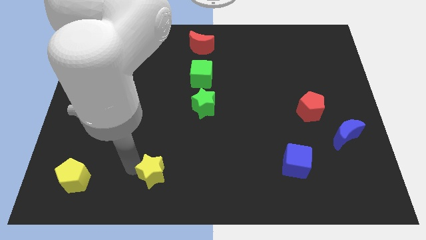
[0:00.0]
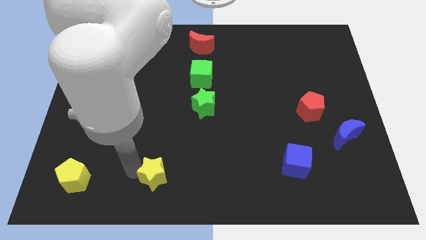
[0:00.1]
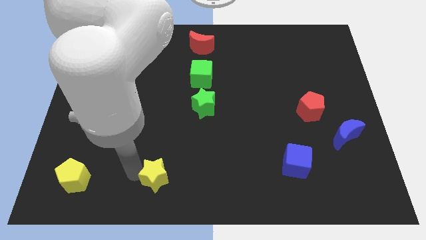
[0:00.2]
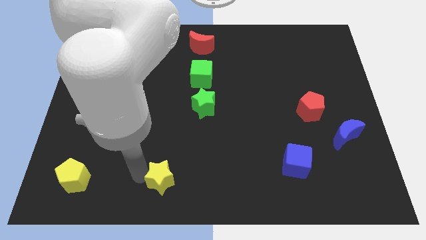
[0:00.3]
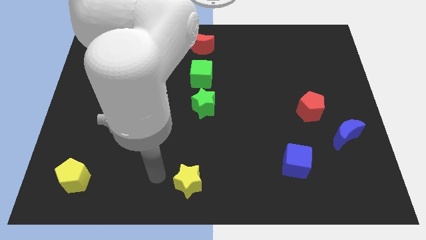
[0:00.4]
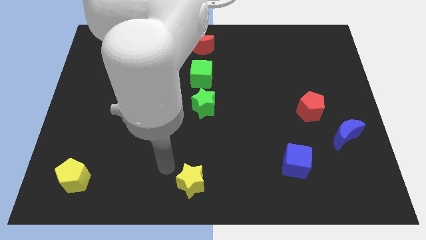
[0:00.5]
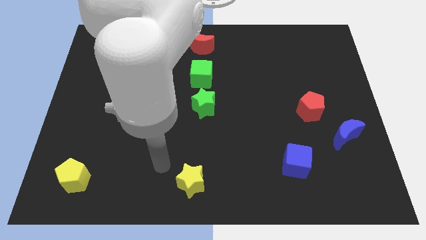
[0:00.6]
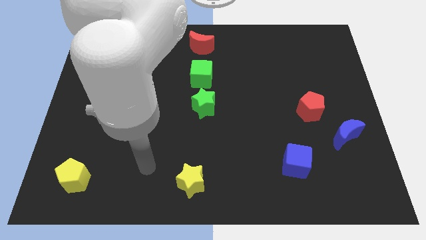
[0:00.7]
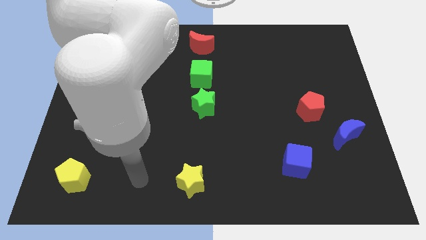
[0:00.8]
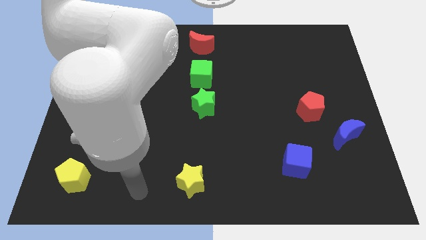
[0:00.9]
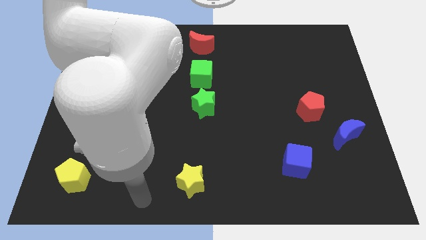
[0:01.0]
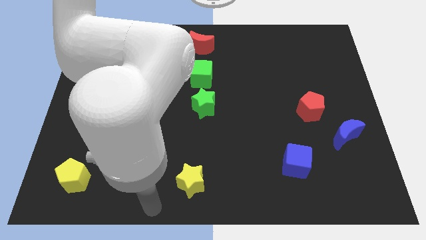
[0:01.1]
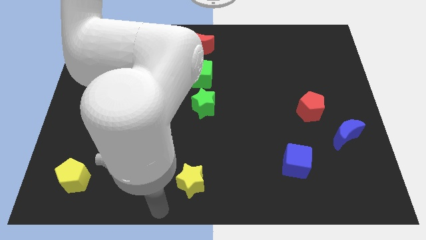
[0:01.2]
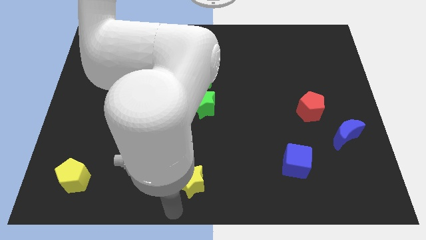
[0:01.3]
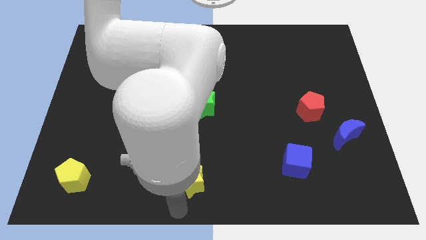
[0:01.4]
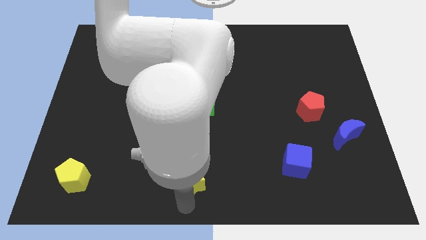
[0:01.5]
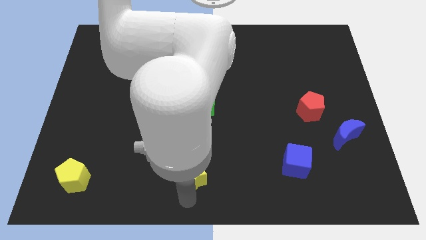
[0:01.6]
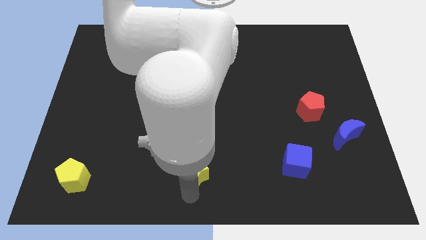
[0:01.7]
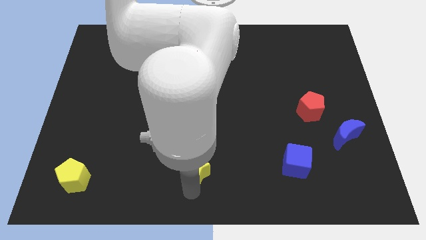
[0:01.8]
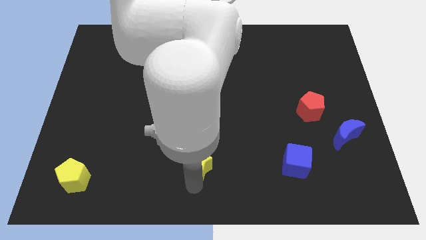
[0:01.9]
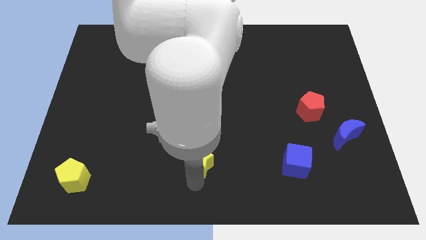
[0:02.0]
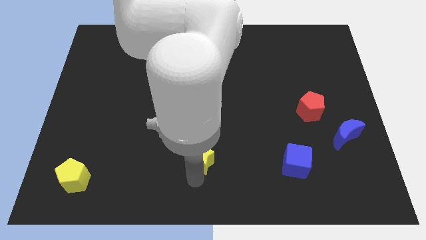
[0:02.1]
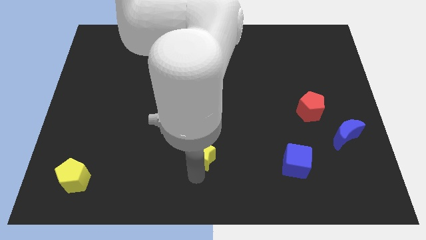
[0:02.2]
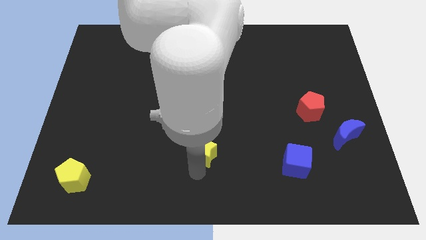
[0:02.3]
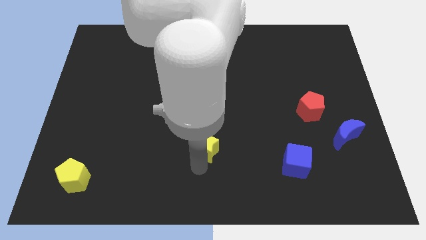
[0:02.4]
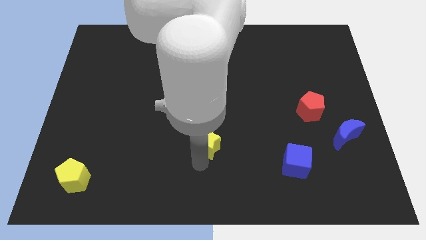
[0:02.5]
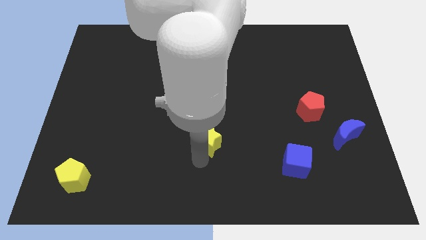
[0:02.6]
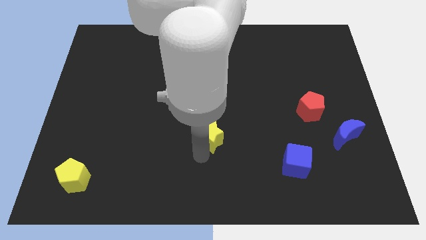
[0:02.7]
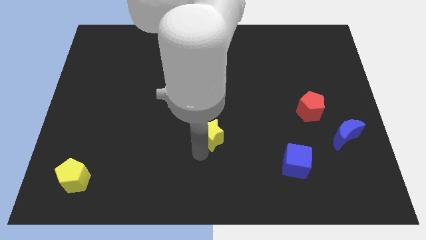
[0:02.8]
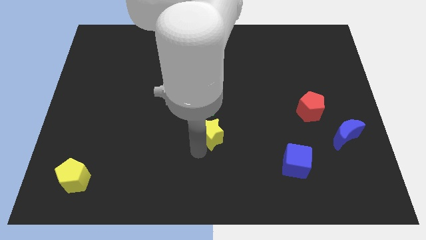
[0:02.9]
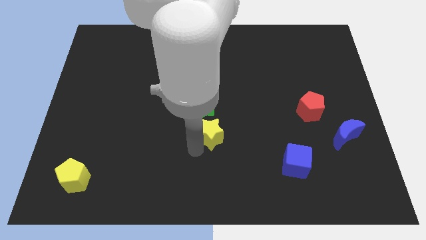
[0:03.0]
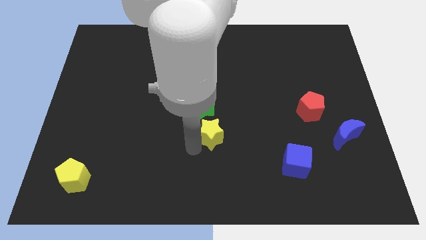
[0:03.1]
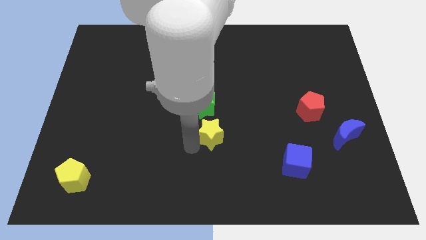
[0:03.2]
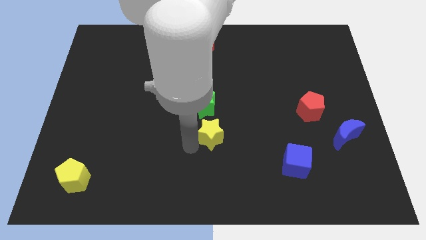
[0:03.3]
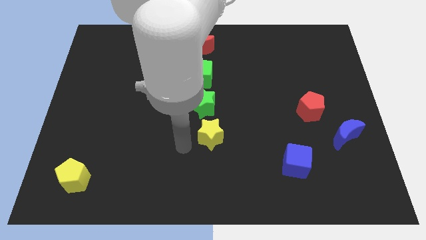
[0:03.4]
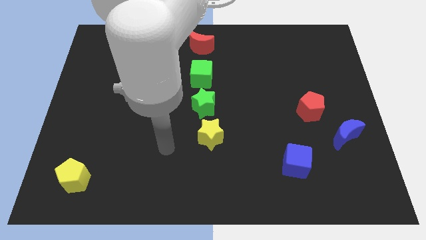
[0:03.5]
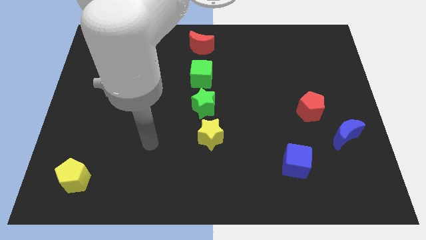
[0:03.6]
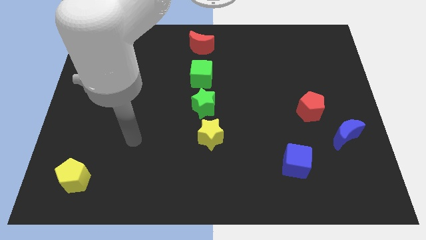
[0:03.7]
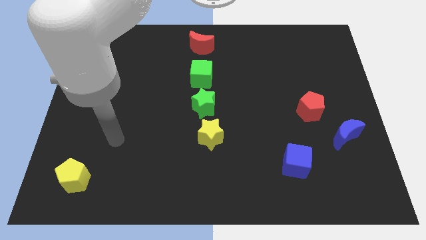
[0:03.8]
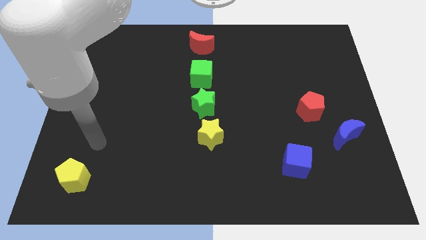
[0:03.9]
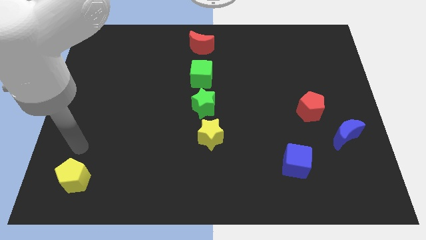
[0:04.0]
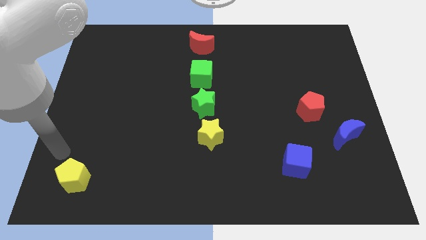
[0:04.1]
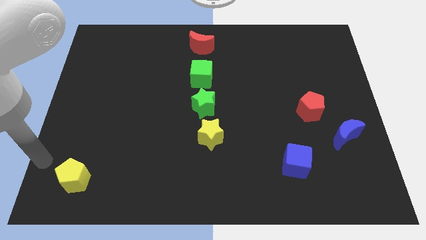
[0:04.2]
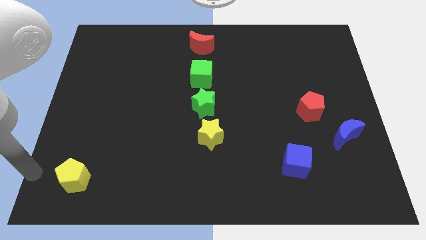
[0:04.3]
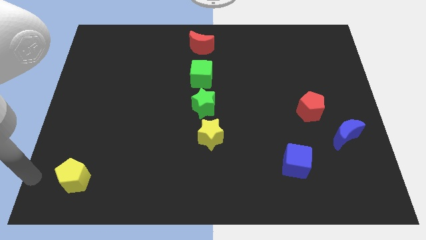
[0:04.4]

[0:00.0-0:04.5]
place the yellow star below the green star

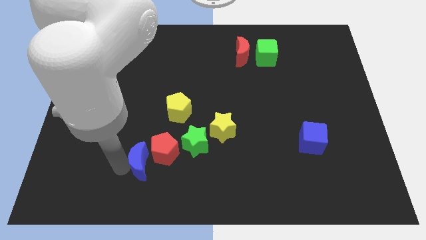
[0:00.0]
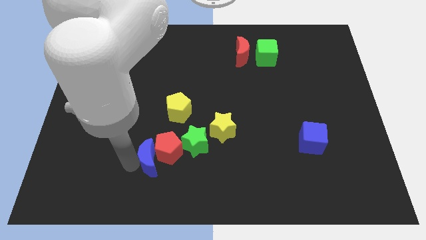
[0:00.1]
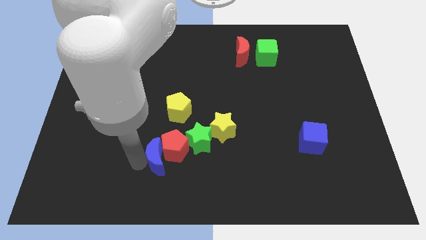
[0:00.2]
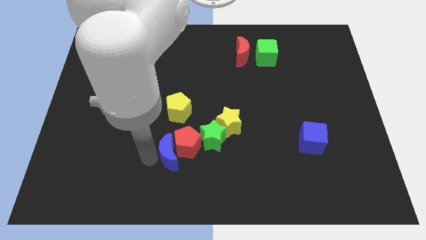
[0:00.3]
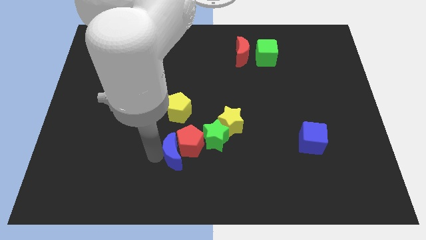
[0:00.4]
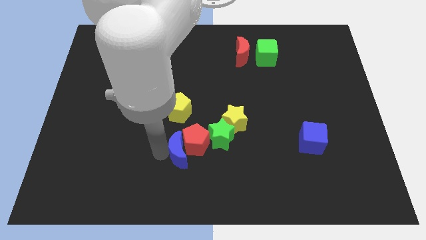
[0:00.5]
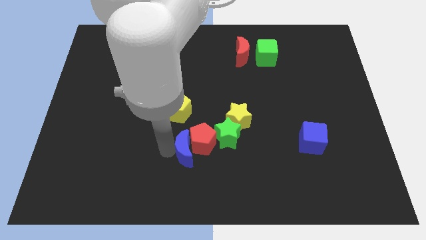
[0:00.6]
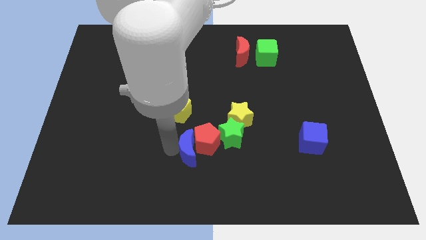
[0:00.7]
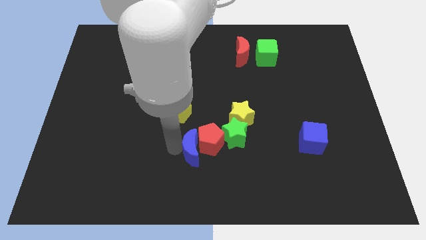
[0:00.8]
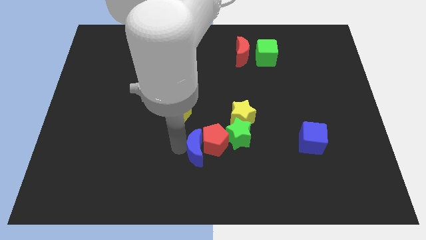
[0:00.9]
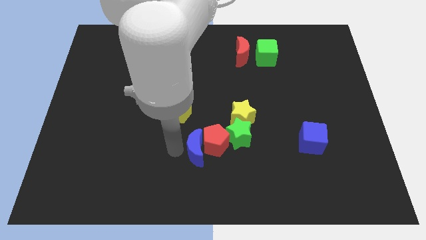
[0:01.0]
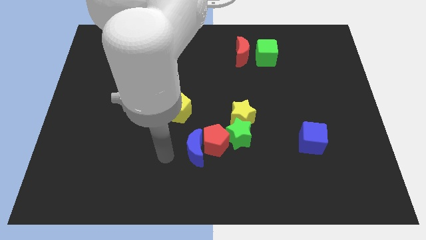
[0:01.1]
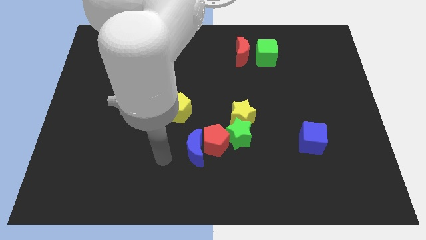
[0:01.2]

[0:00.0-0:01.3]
move a group of blocks in between the yellow pentagon and blue cube

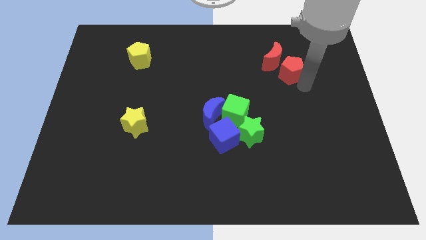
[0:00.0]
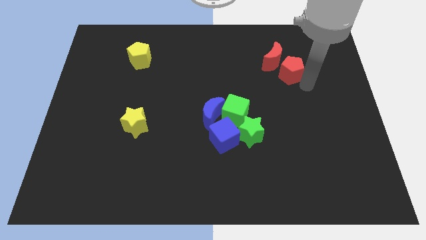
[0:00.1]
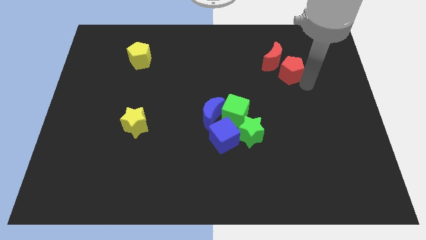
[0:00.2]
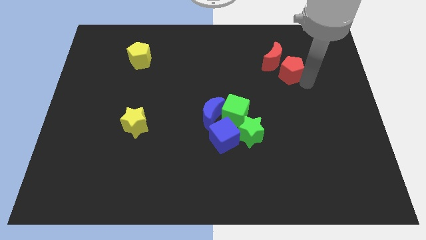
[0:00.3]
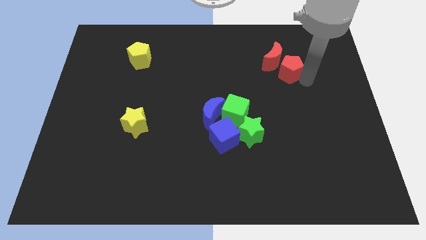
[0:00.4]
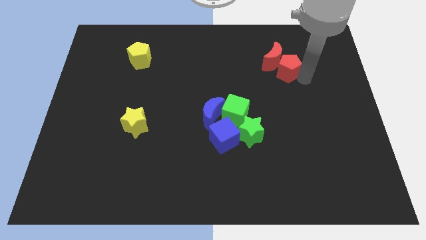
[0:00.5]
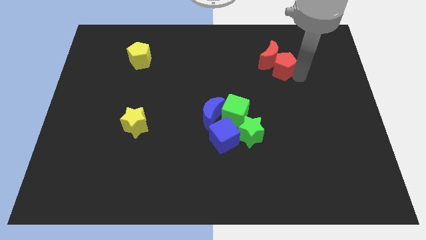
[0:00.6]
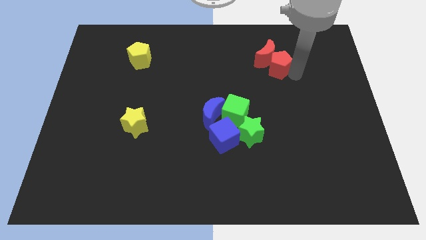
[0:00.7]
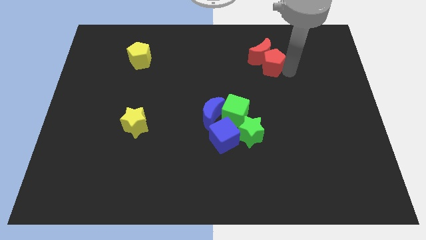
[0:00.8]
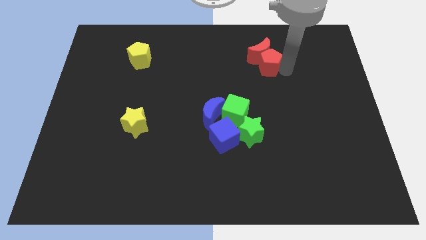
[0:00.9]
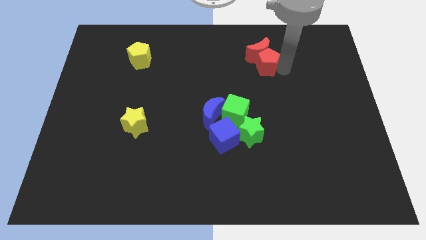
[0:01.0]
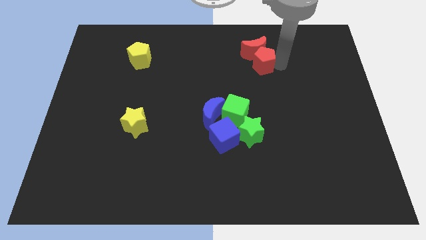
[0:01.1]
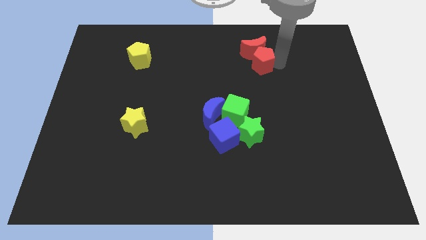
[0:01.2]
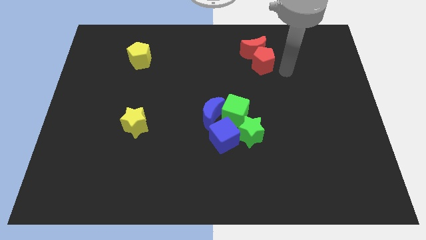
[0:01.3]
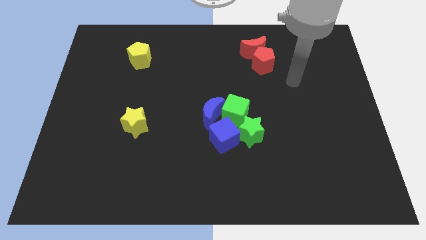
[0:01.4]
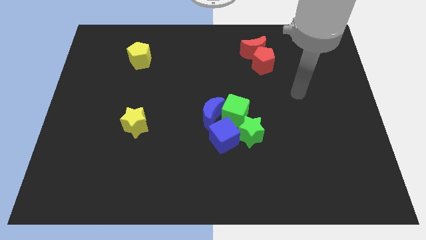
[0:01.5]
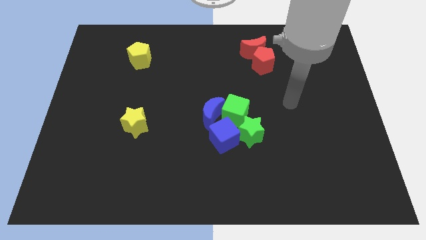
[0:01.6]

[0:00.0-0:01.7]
push the red moon slightly with the red pentagon

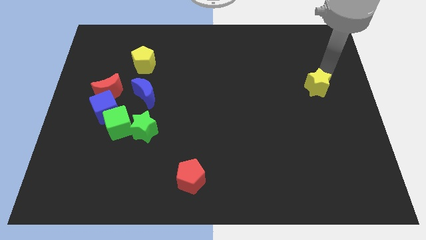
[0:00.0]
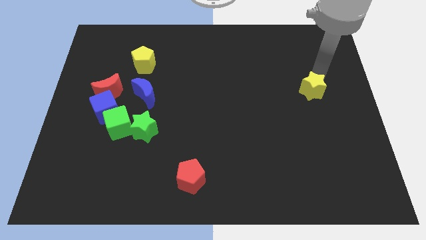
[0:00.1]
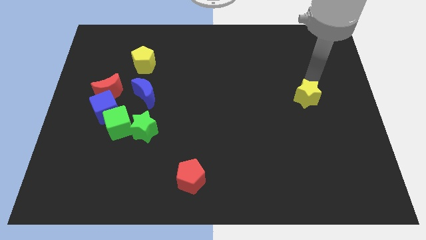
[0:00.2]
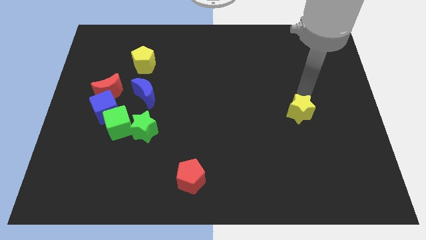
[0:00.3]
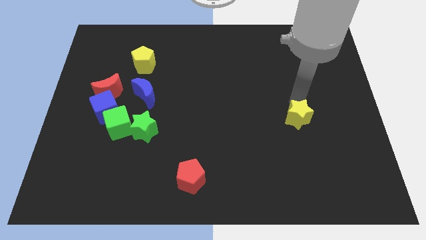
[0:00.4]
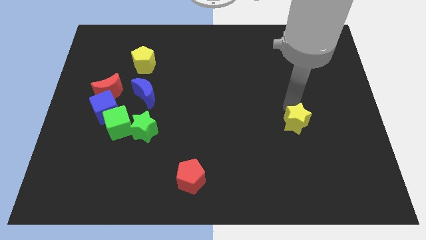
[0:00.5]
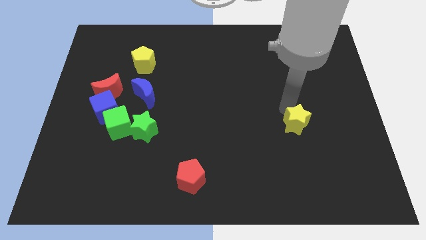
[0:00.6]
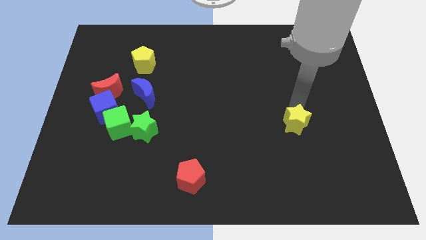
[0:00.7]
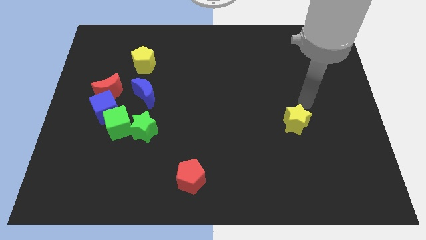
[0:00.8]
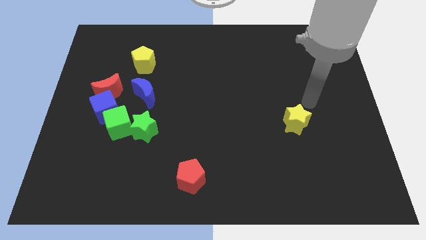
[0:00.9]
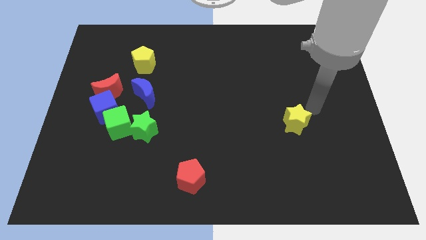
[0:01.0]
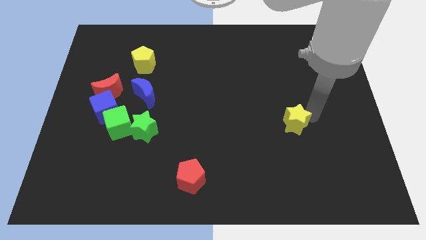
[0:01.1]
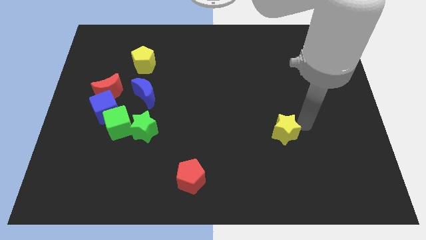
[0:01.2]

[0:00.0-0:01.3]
push the yellow star to the bottom of the board
